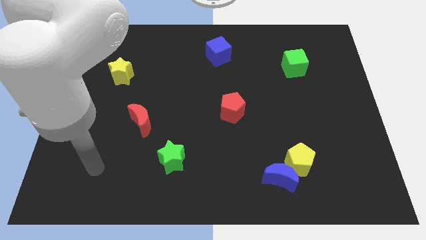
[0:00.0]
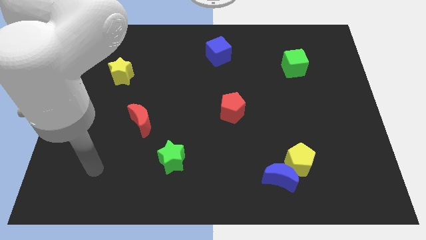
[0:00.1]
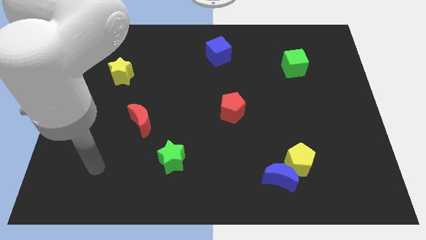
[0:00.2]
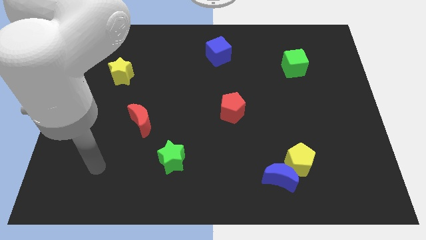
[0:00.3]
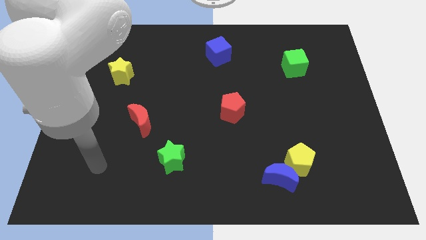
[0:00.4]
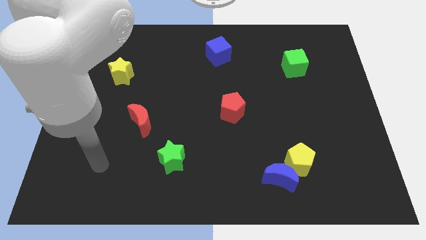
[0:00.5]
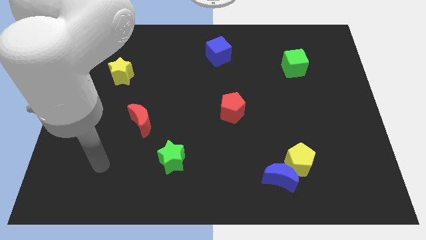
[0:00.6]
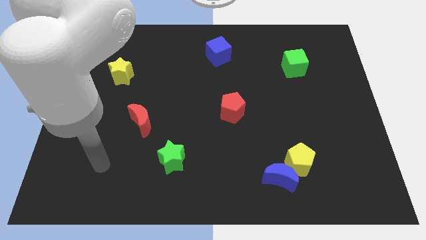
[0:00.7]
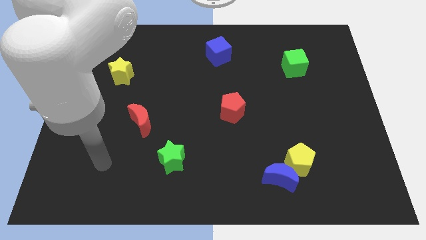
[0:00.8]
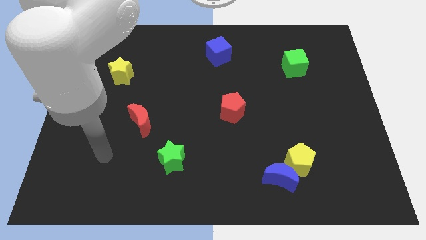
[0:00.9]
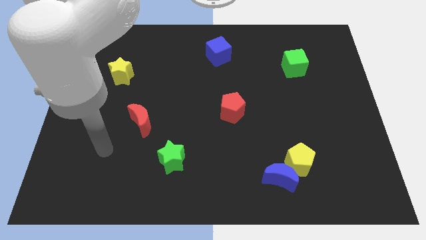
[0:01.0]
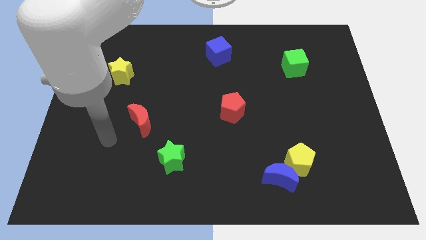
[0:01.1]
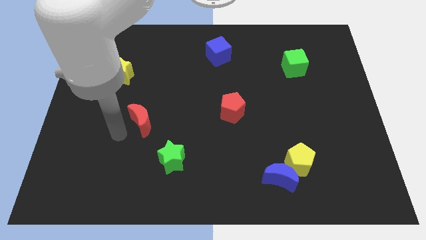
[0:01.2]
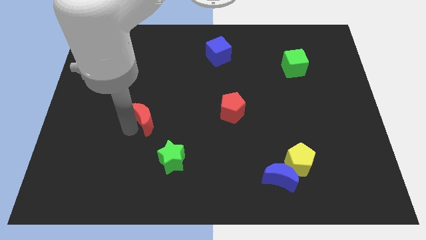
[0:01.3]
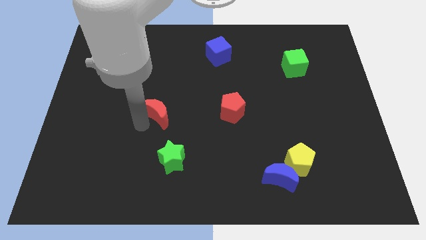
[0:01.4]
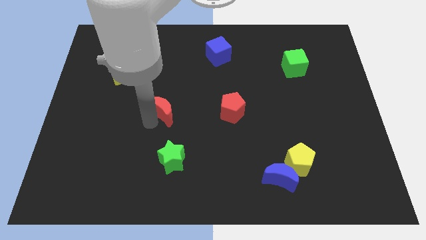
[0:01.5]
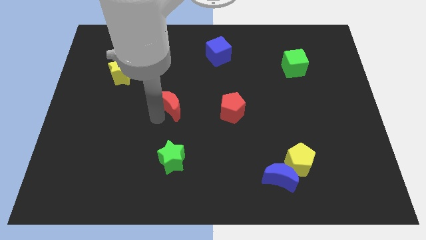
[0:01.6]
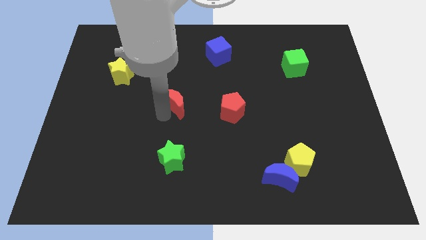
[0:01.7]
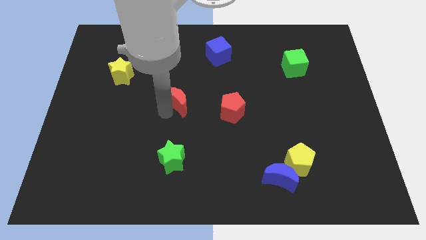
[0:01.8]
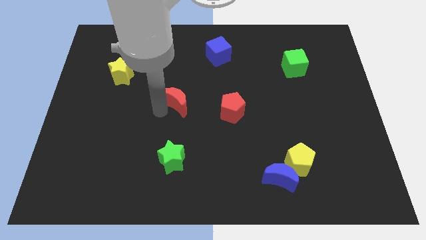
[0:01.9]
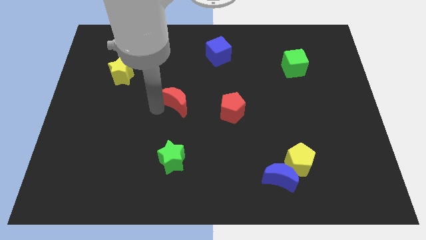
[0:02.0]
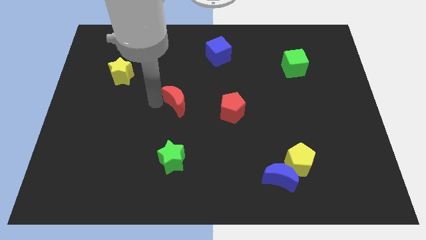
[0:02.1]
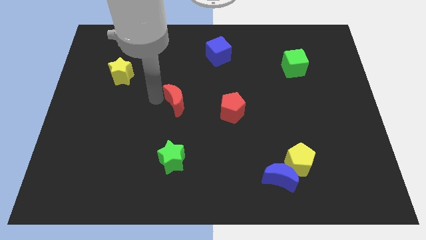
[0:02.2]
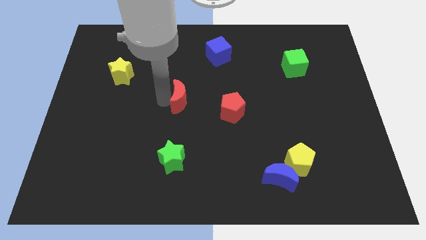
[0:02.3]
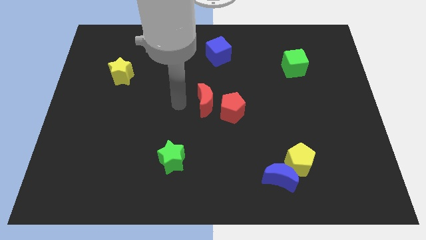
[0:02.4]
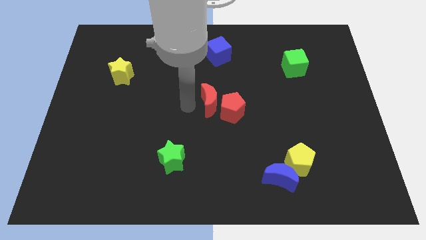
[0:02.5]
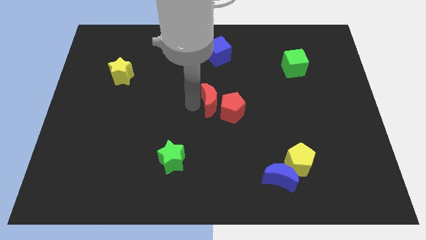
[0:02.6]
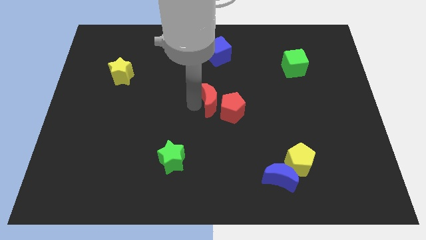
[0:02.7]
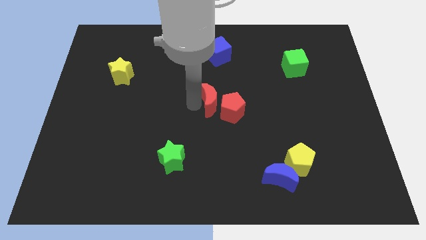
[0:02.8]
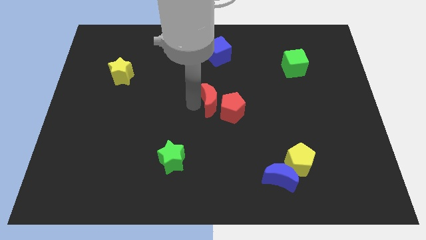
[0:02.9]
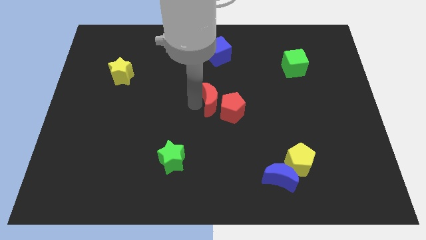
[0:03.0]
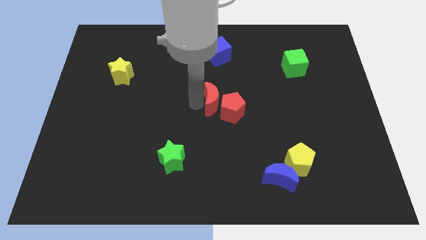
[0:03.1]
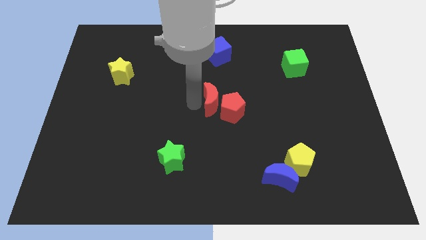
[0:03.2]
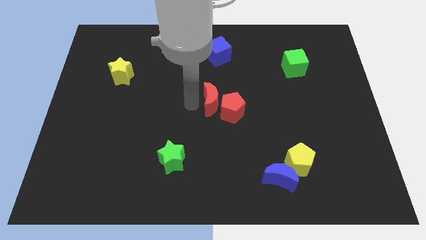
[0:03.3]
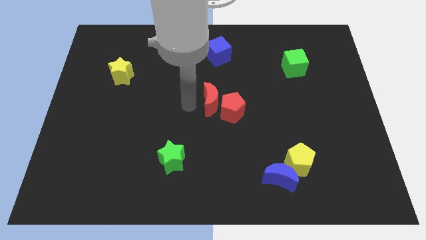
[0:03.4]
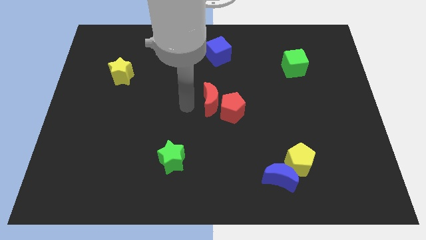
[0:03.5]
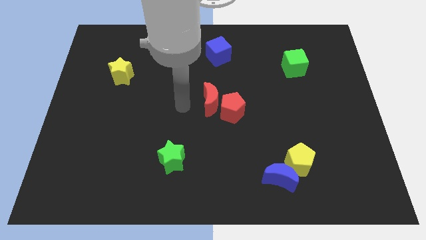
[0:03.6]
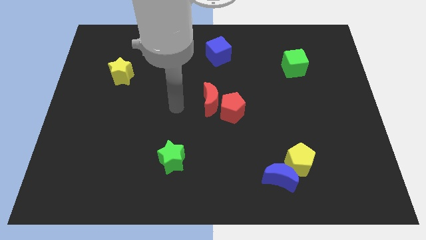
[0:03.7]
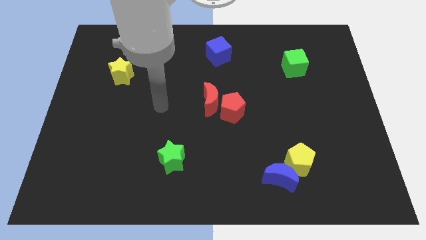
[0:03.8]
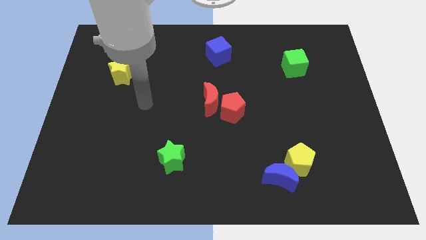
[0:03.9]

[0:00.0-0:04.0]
move red moon close to red pentagon

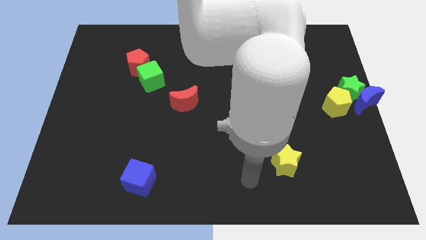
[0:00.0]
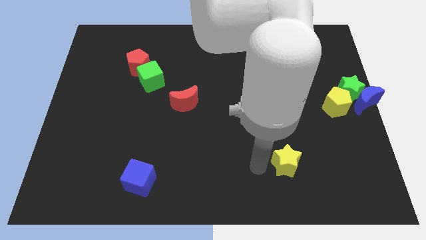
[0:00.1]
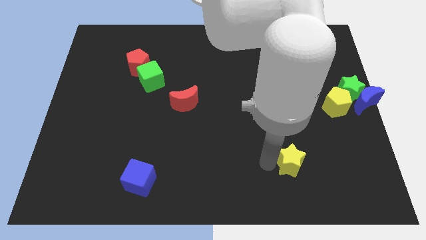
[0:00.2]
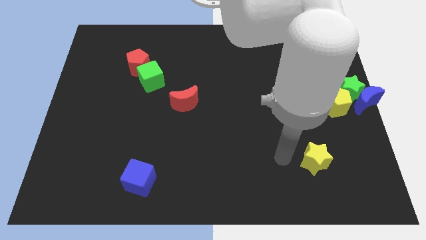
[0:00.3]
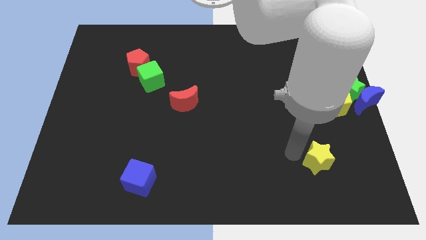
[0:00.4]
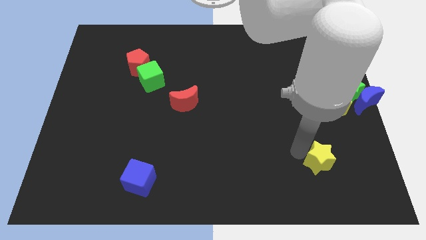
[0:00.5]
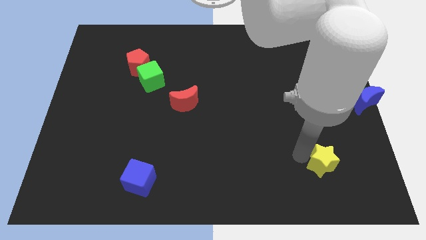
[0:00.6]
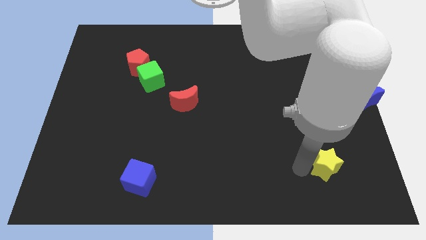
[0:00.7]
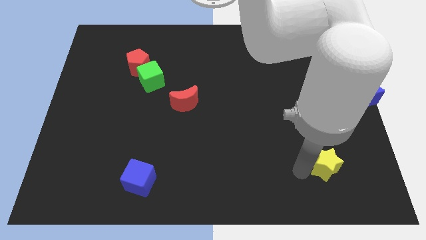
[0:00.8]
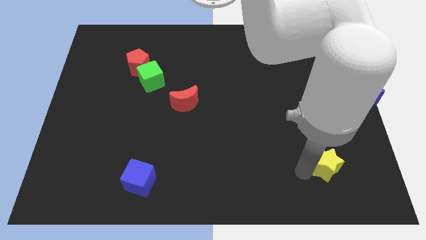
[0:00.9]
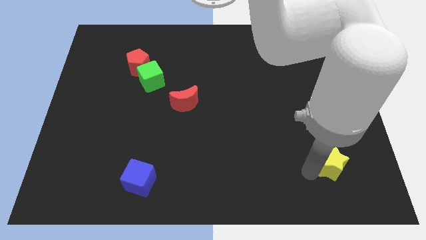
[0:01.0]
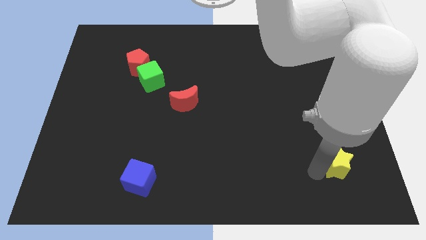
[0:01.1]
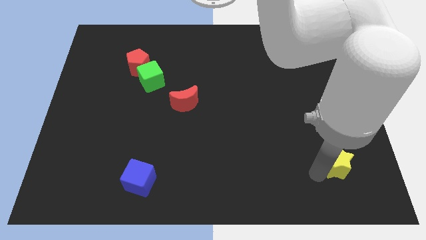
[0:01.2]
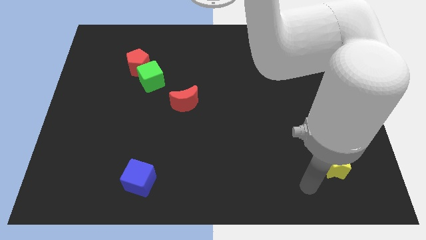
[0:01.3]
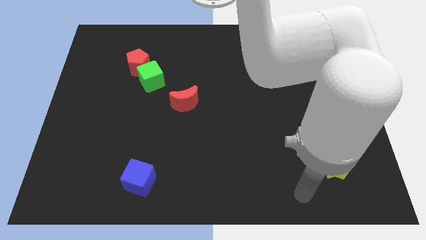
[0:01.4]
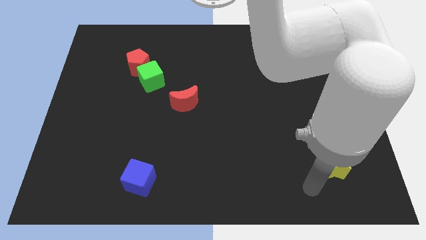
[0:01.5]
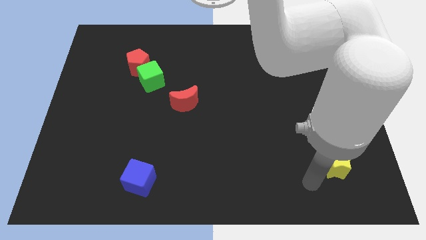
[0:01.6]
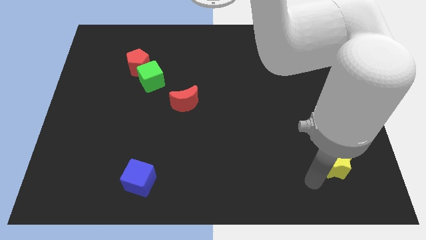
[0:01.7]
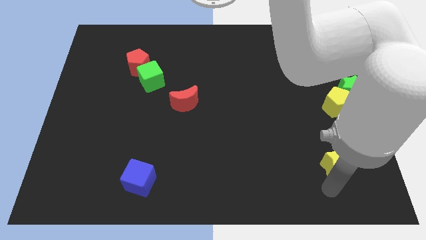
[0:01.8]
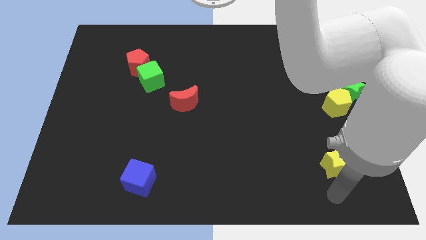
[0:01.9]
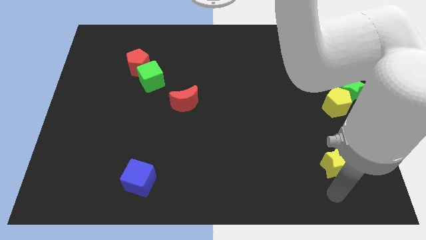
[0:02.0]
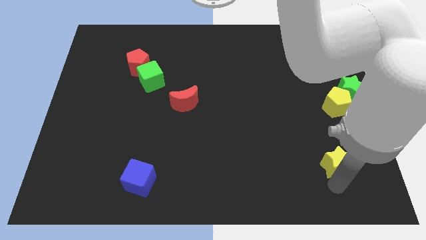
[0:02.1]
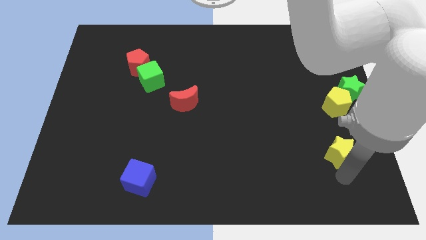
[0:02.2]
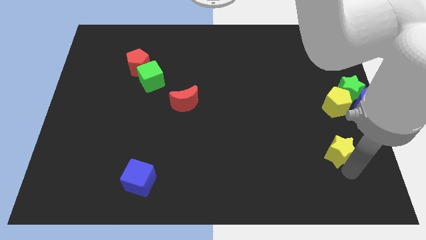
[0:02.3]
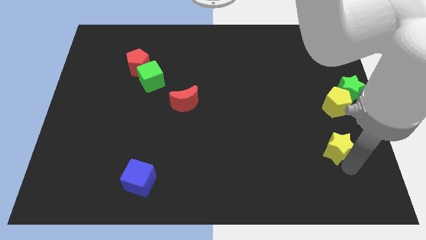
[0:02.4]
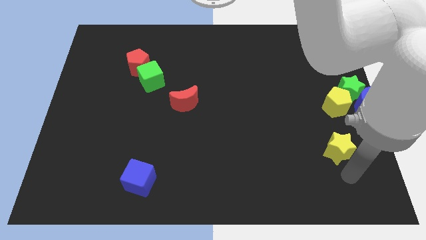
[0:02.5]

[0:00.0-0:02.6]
place the yellow star below yellow pentagon

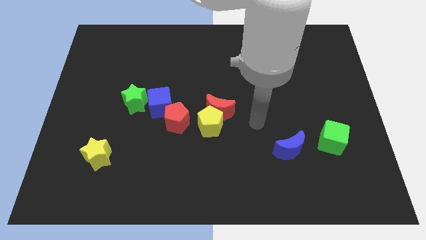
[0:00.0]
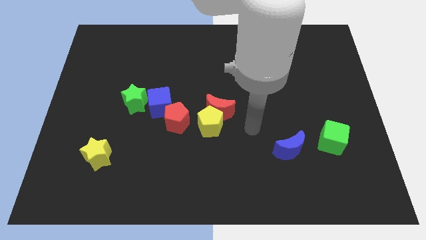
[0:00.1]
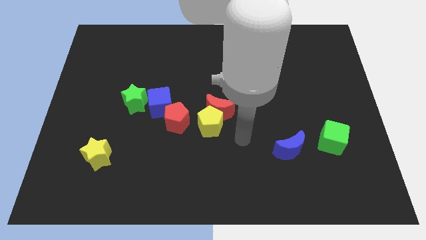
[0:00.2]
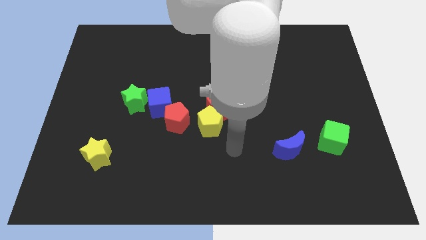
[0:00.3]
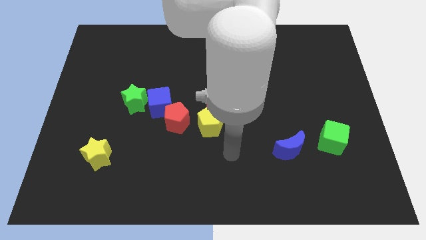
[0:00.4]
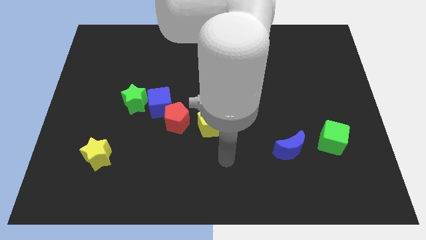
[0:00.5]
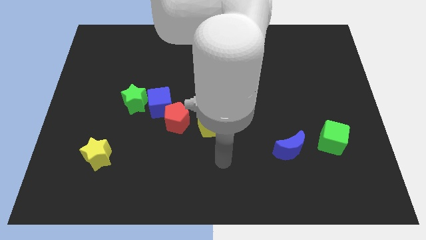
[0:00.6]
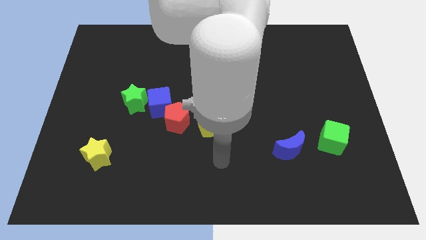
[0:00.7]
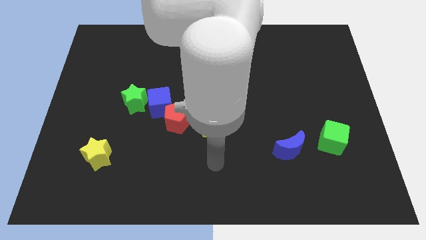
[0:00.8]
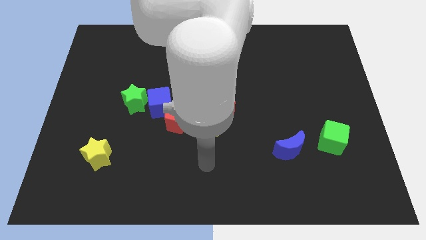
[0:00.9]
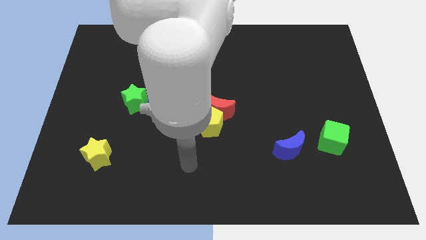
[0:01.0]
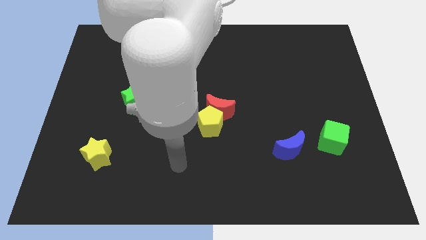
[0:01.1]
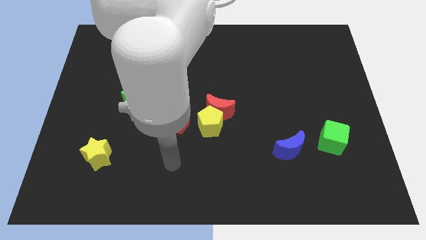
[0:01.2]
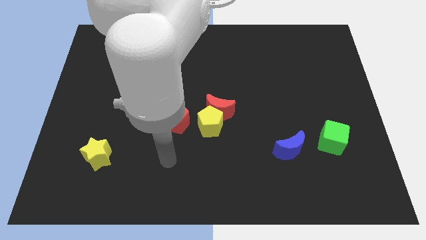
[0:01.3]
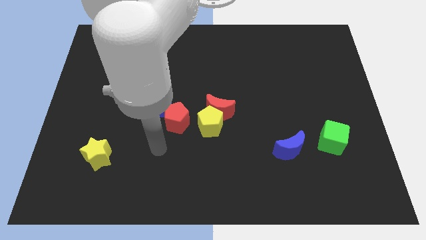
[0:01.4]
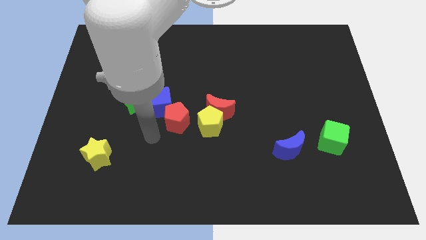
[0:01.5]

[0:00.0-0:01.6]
move the arm towards the blue cube

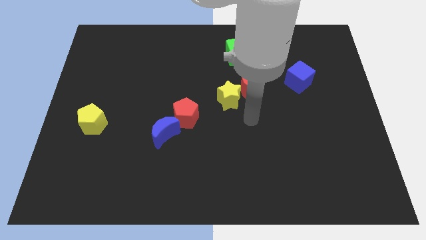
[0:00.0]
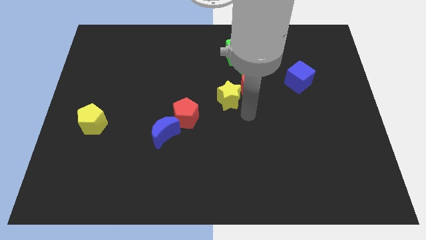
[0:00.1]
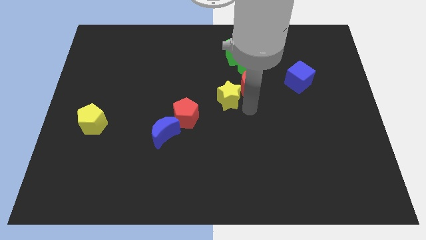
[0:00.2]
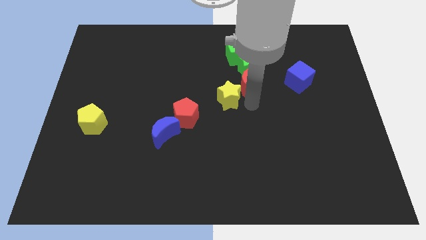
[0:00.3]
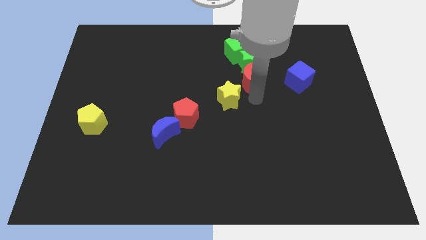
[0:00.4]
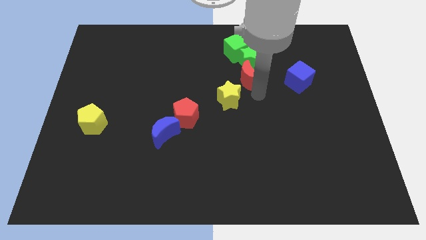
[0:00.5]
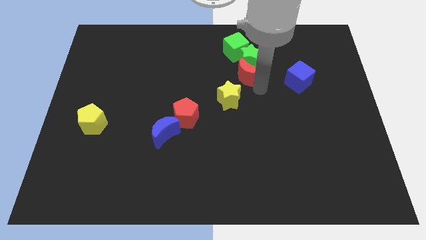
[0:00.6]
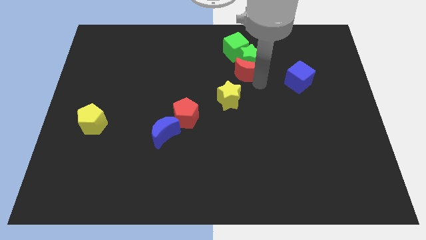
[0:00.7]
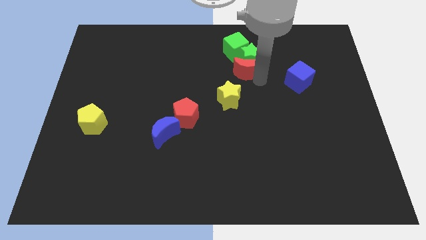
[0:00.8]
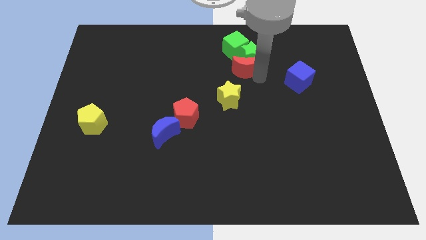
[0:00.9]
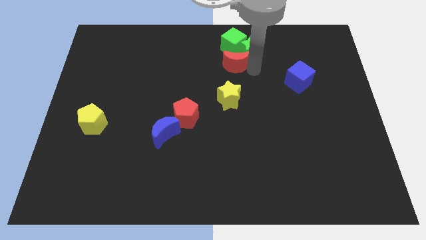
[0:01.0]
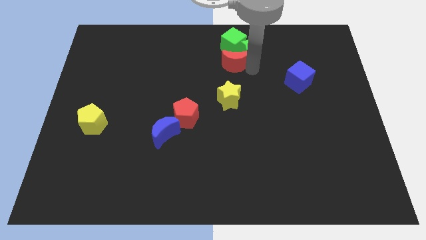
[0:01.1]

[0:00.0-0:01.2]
slide red crescent into green blocks
